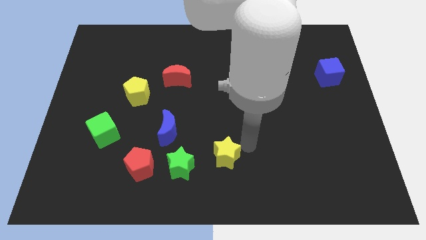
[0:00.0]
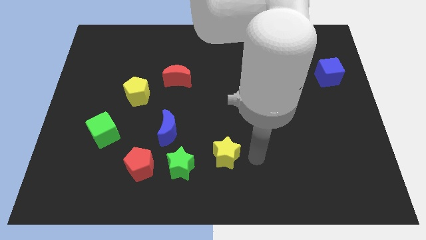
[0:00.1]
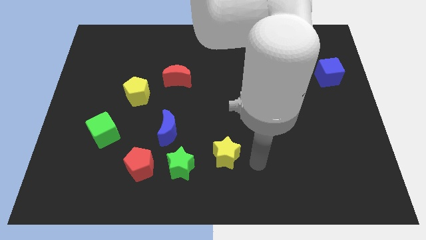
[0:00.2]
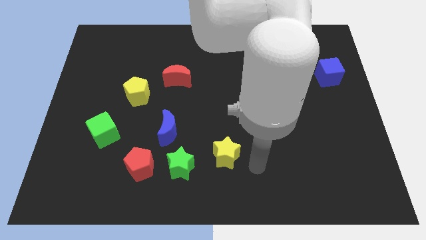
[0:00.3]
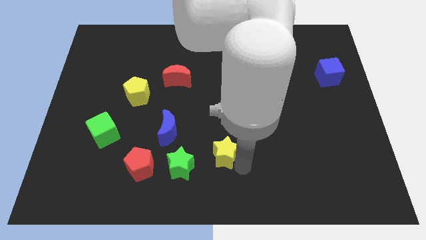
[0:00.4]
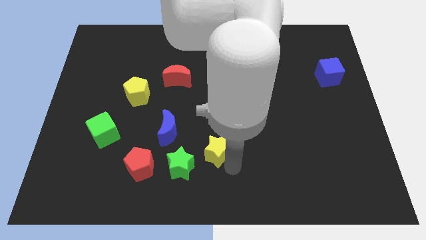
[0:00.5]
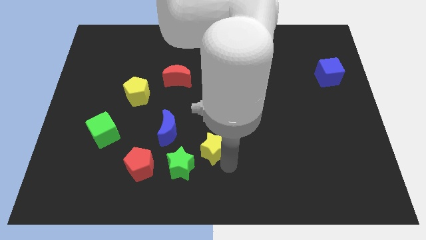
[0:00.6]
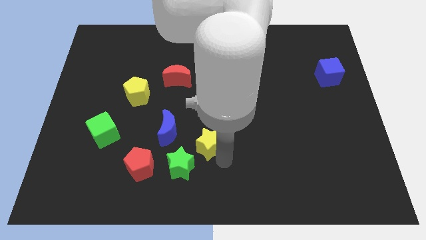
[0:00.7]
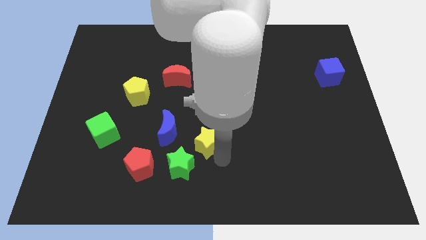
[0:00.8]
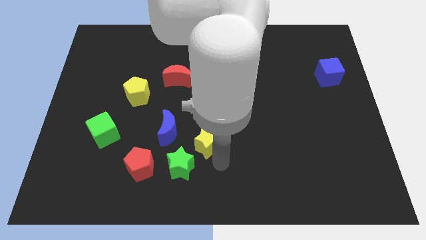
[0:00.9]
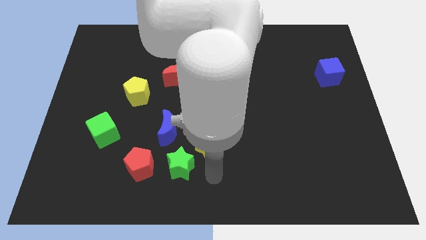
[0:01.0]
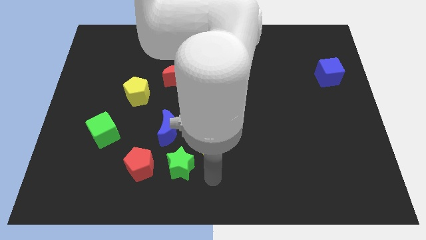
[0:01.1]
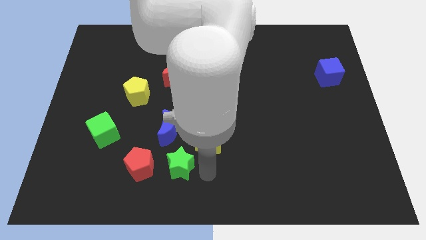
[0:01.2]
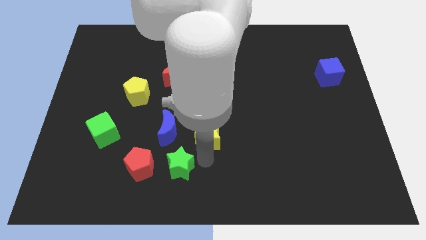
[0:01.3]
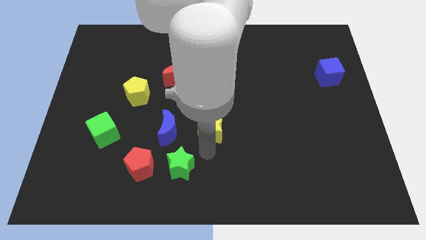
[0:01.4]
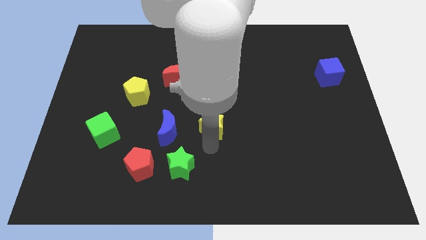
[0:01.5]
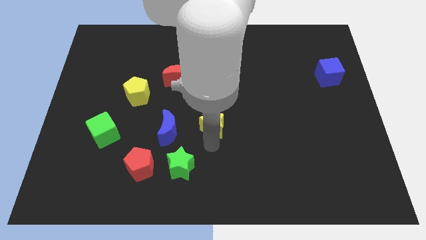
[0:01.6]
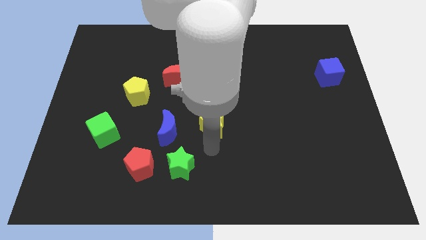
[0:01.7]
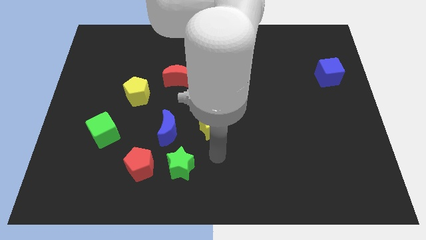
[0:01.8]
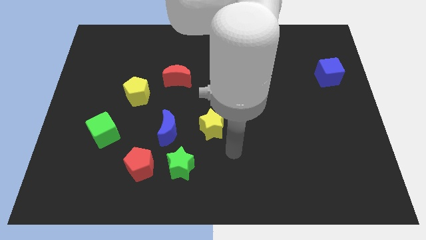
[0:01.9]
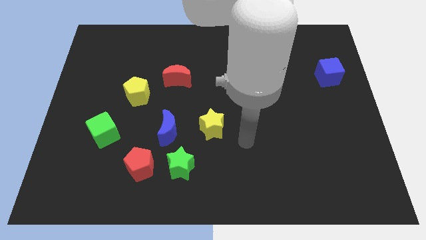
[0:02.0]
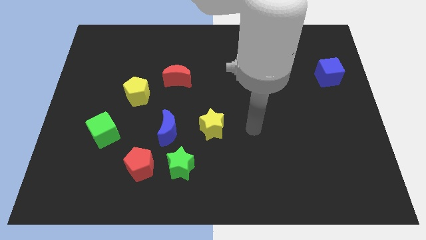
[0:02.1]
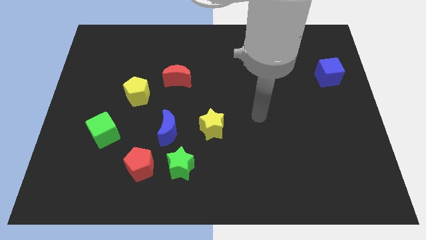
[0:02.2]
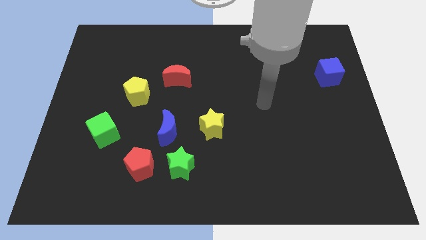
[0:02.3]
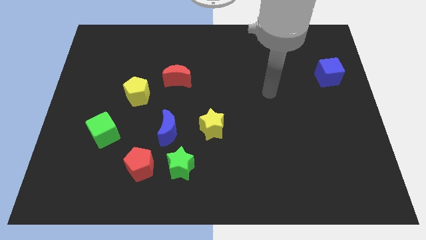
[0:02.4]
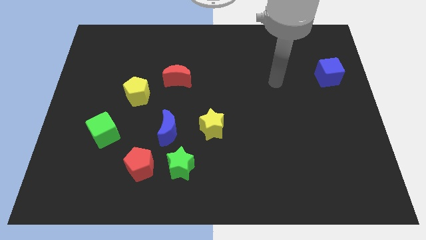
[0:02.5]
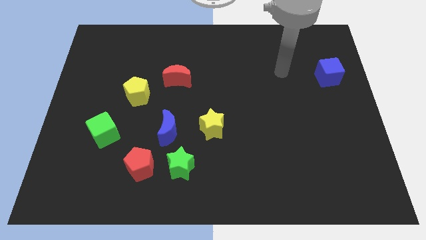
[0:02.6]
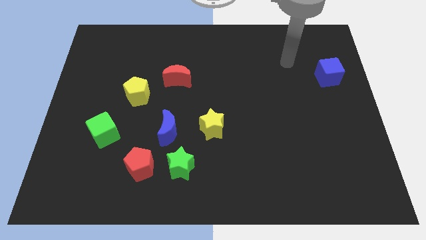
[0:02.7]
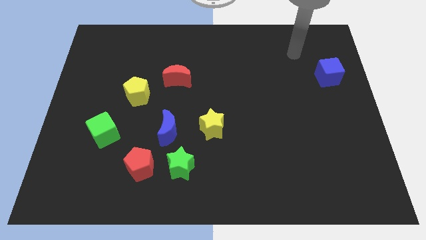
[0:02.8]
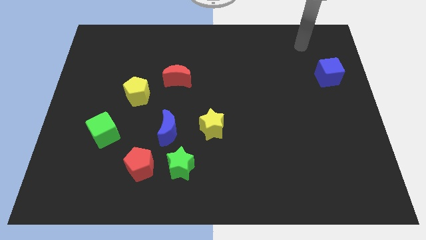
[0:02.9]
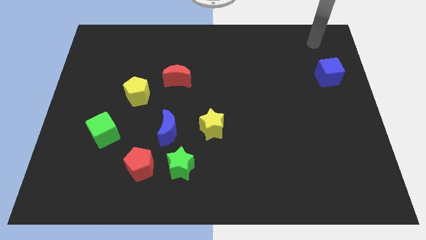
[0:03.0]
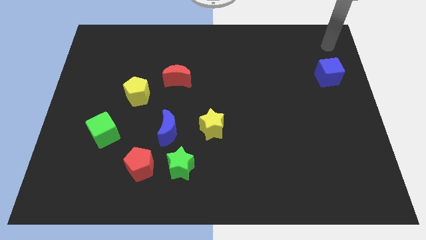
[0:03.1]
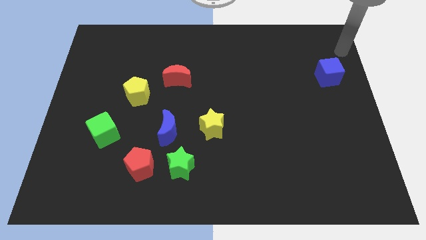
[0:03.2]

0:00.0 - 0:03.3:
place the yellow star to the center of the board

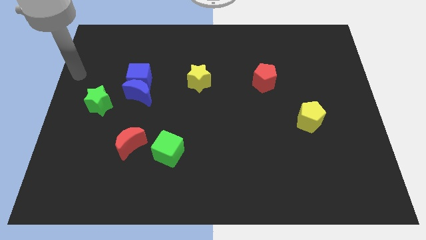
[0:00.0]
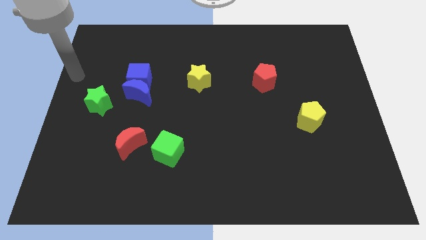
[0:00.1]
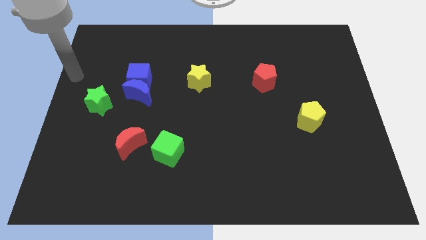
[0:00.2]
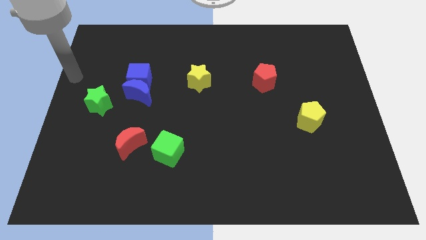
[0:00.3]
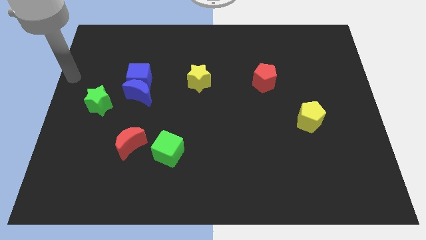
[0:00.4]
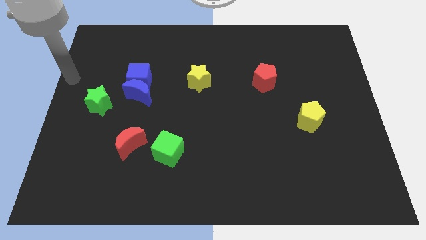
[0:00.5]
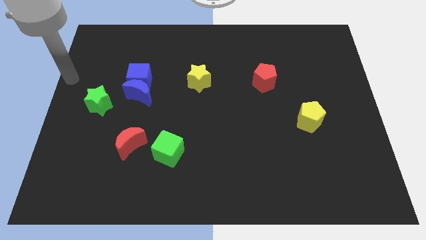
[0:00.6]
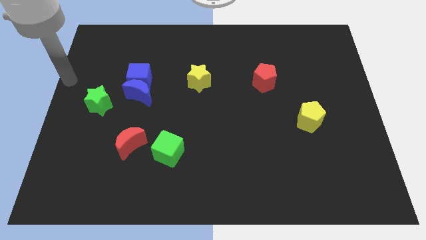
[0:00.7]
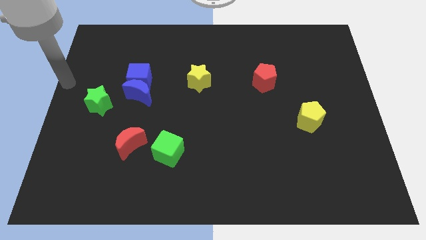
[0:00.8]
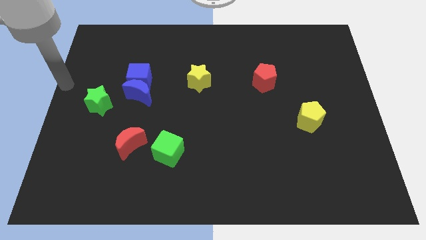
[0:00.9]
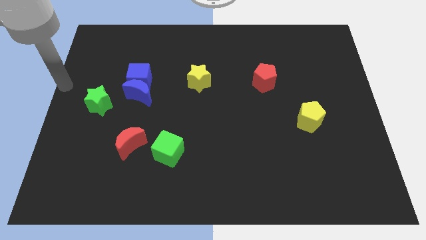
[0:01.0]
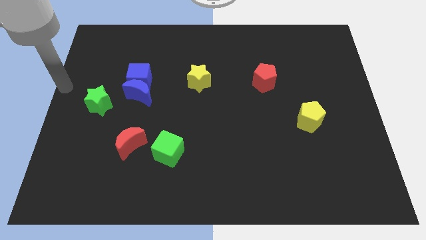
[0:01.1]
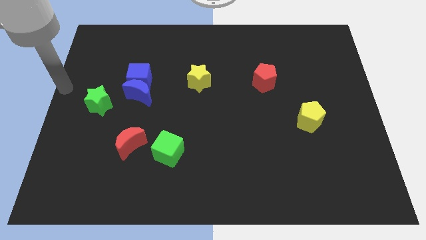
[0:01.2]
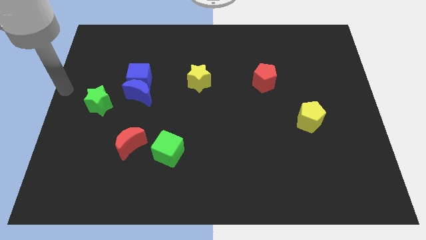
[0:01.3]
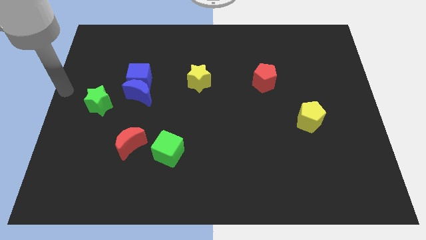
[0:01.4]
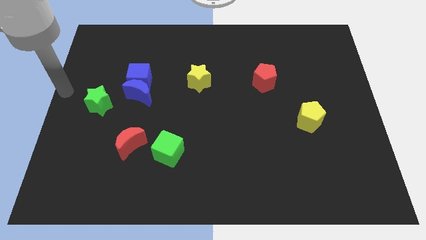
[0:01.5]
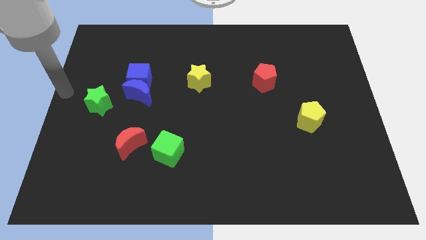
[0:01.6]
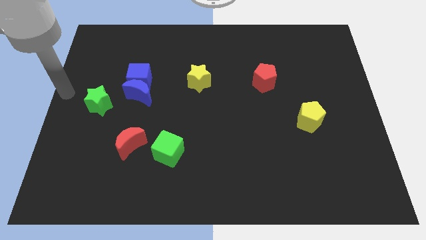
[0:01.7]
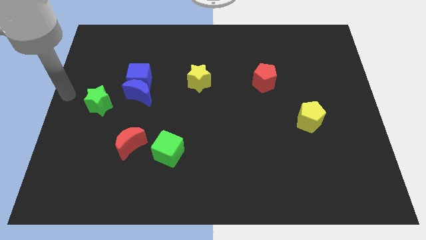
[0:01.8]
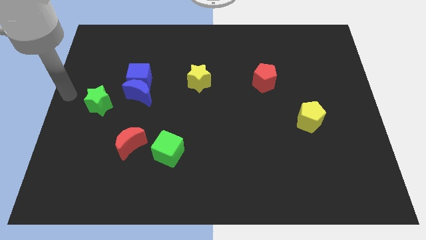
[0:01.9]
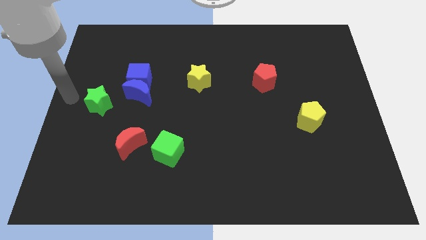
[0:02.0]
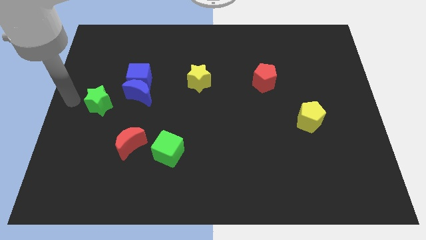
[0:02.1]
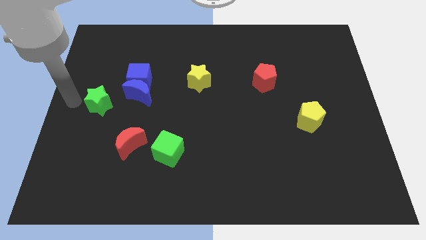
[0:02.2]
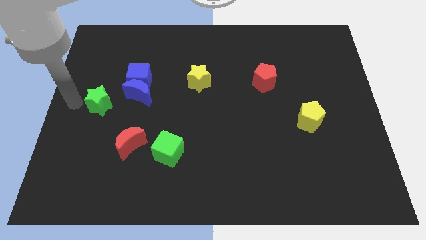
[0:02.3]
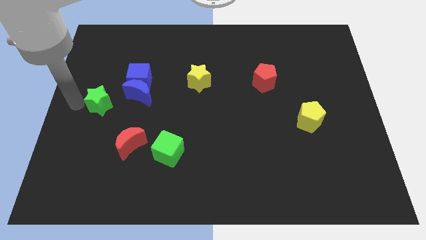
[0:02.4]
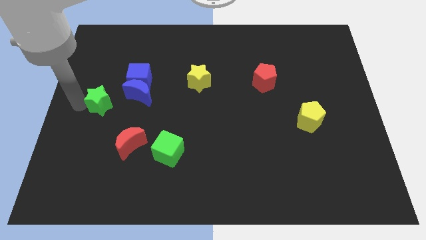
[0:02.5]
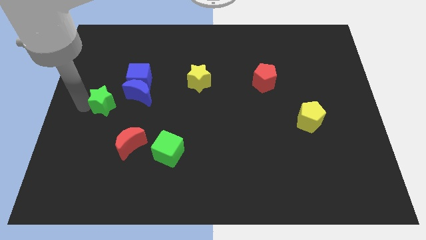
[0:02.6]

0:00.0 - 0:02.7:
point the arm to the left of the green star

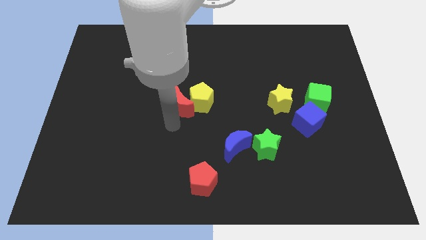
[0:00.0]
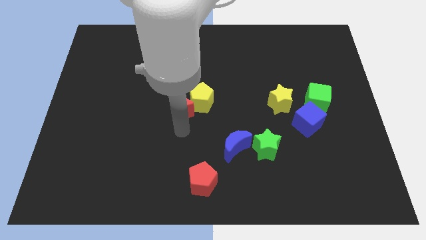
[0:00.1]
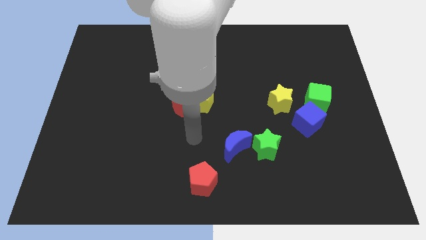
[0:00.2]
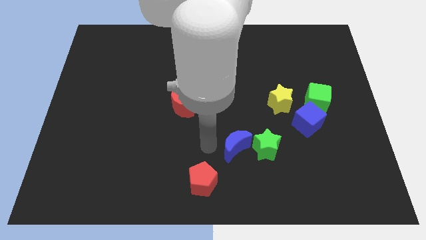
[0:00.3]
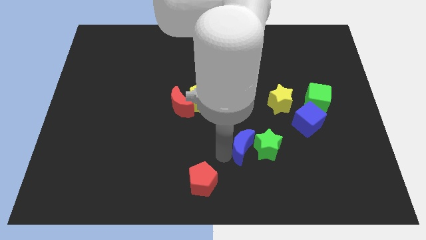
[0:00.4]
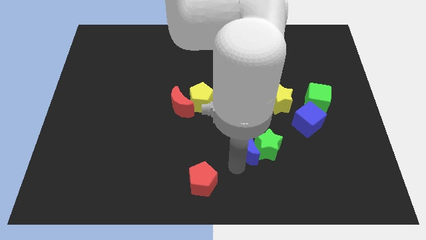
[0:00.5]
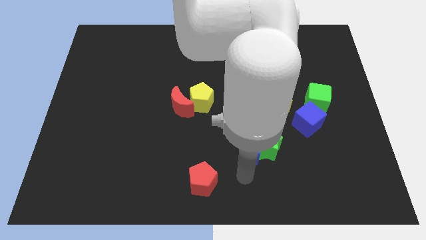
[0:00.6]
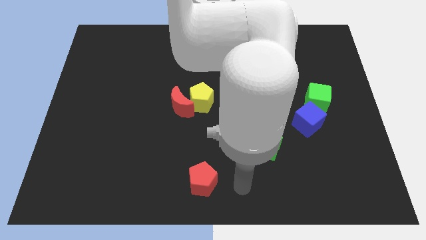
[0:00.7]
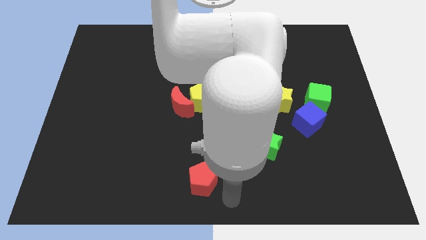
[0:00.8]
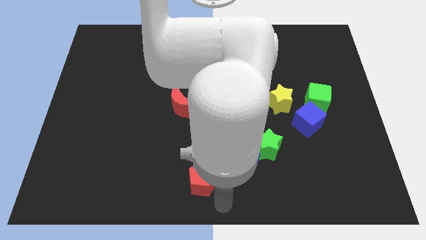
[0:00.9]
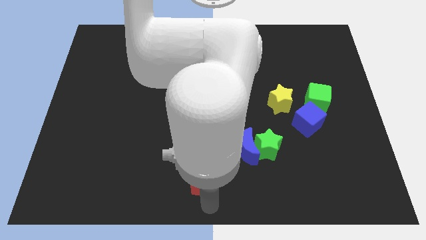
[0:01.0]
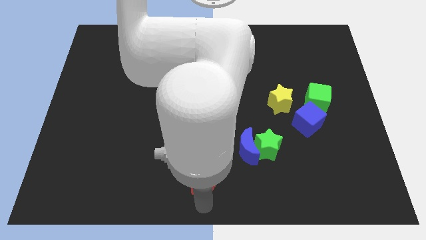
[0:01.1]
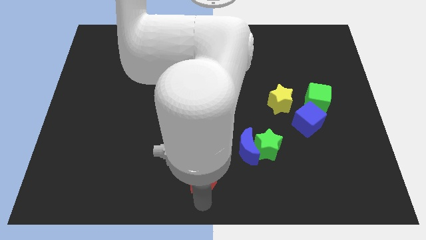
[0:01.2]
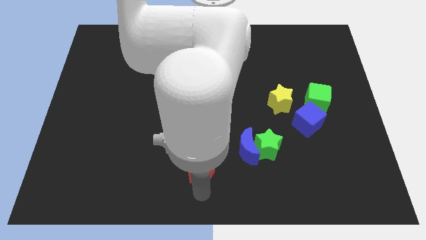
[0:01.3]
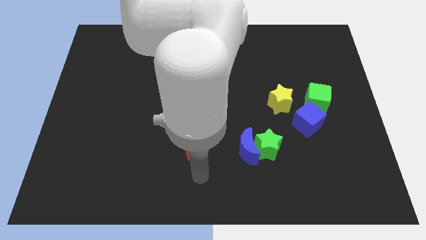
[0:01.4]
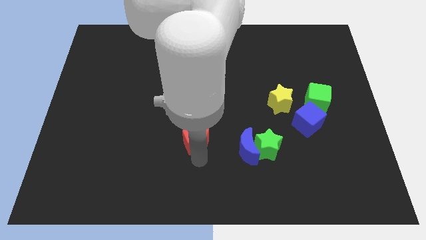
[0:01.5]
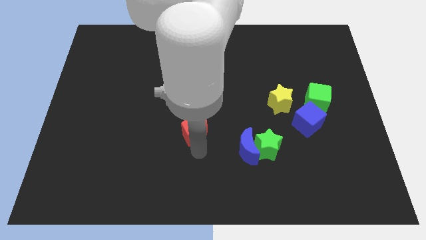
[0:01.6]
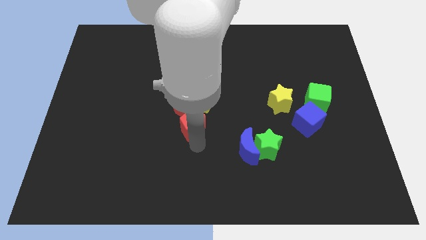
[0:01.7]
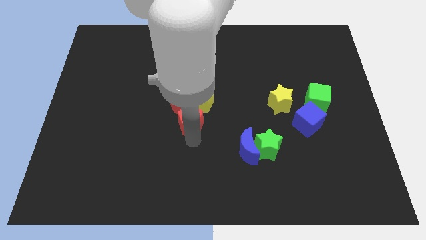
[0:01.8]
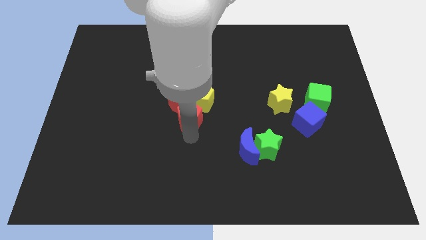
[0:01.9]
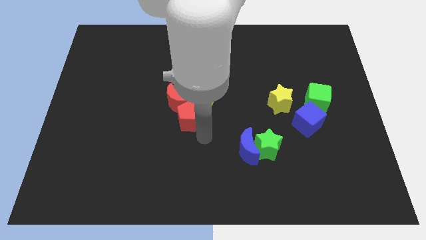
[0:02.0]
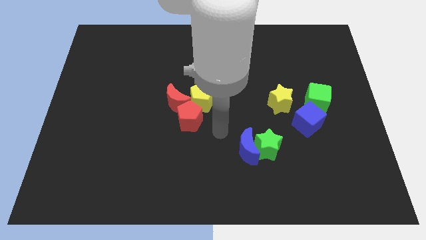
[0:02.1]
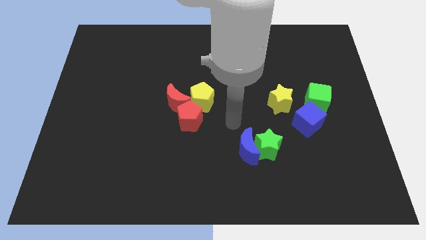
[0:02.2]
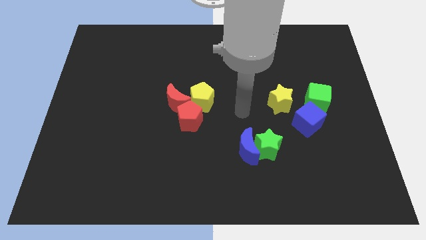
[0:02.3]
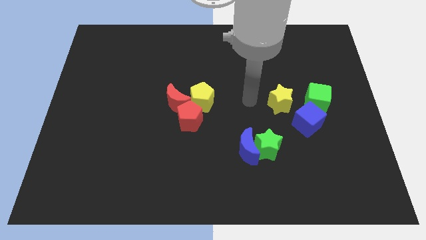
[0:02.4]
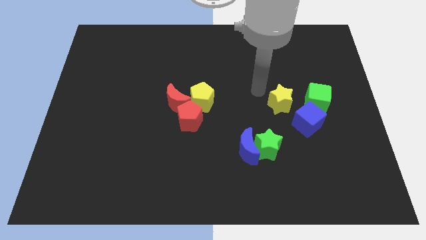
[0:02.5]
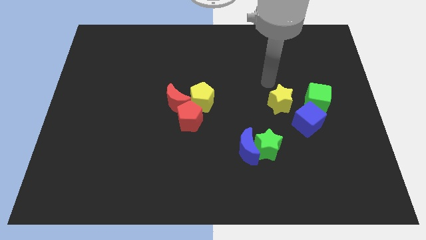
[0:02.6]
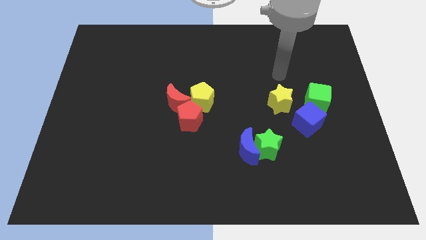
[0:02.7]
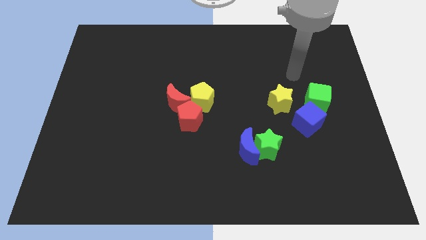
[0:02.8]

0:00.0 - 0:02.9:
push the red pentagon into the red crescent
